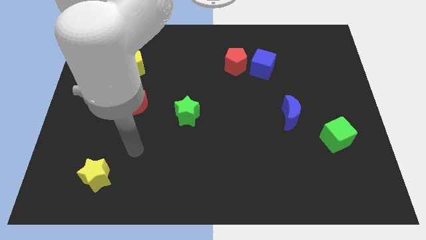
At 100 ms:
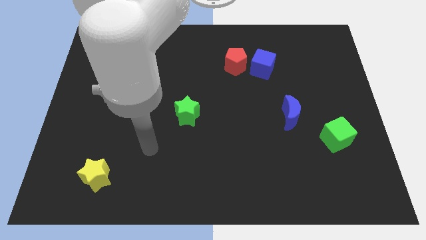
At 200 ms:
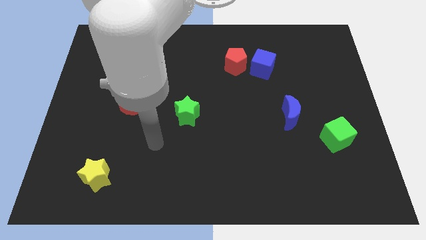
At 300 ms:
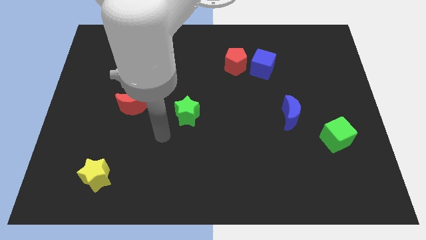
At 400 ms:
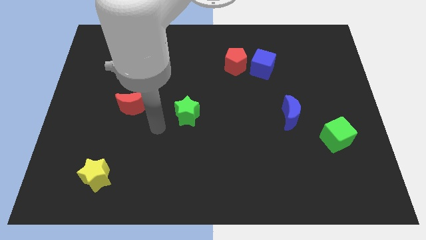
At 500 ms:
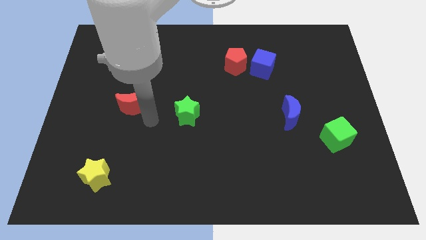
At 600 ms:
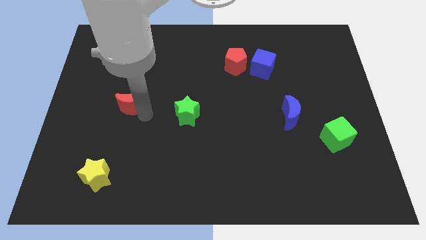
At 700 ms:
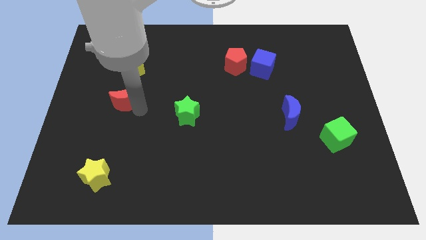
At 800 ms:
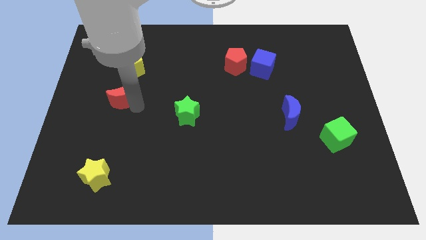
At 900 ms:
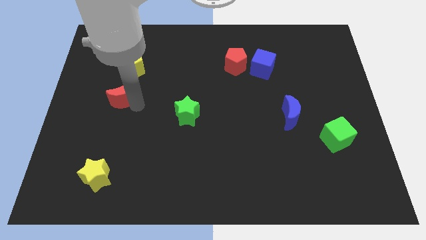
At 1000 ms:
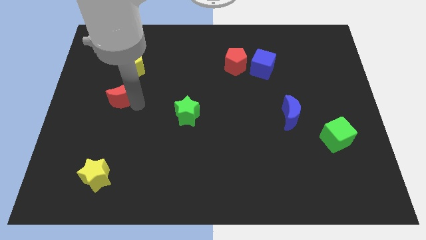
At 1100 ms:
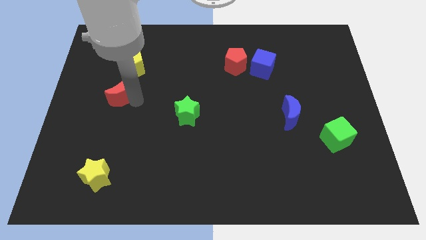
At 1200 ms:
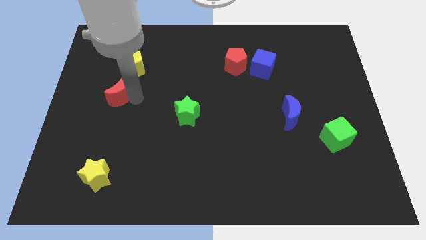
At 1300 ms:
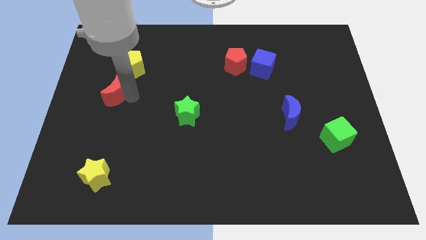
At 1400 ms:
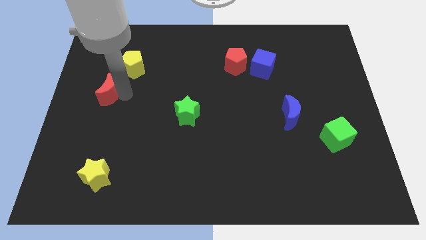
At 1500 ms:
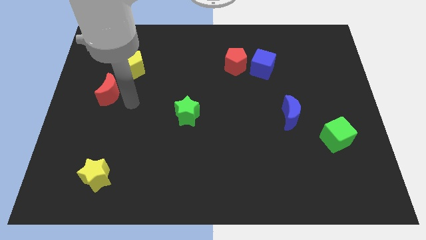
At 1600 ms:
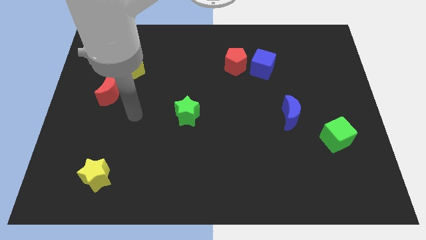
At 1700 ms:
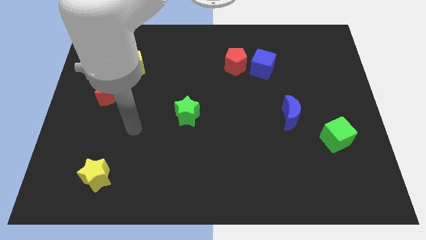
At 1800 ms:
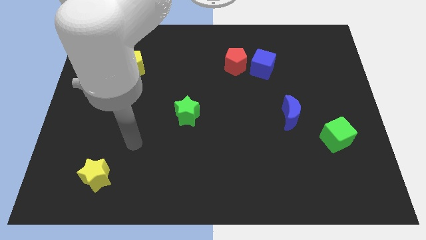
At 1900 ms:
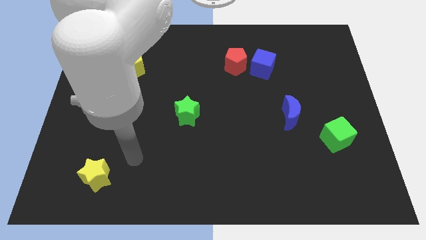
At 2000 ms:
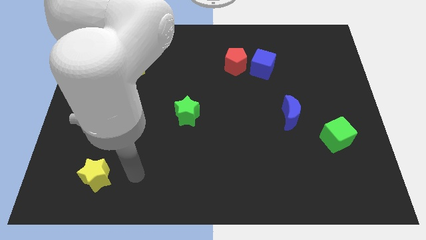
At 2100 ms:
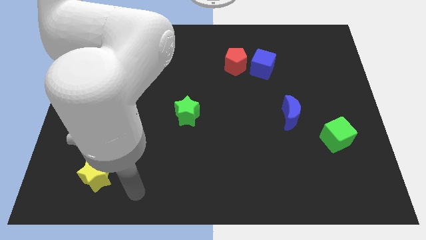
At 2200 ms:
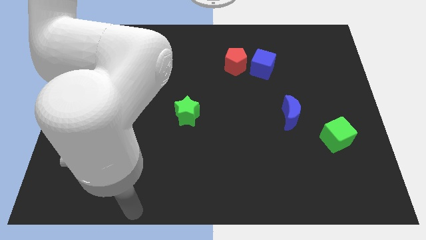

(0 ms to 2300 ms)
slide the red moon towards the left center

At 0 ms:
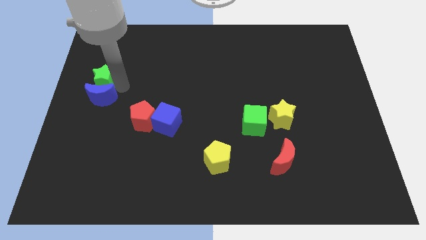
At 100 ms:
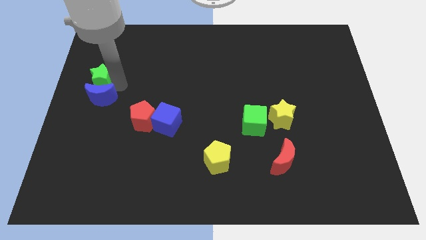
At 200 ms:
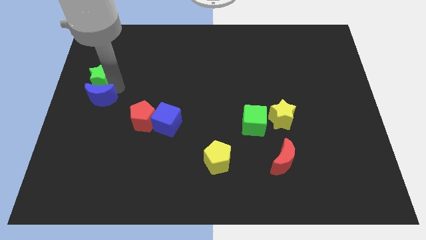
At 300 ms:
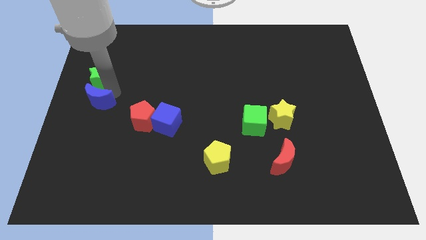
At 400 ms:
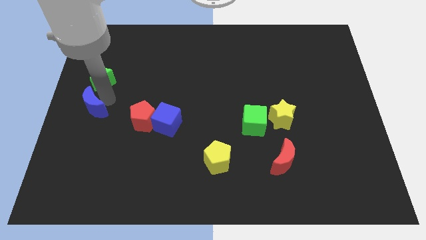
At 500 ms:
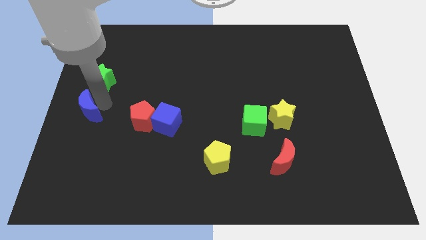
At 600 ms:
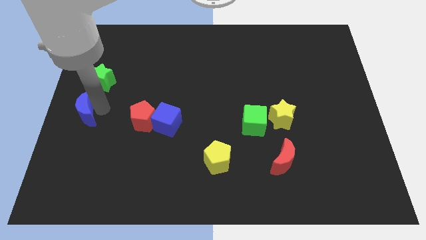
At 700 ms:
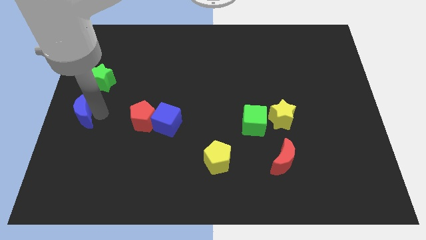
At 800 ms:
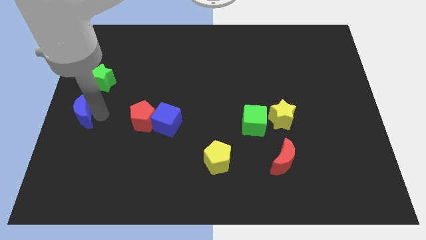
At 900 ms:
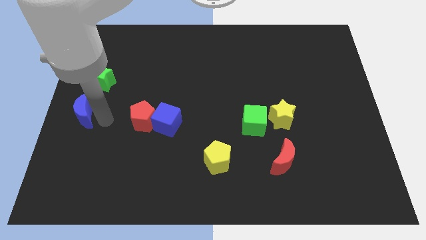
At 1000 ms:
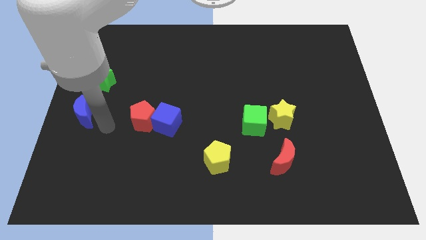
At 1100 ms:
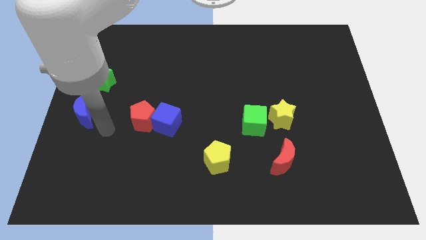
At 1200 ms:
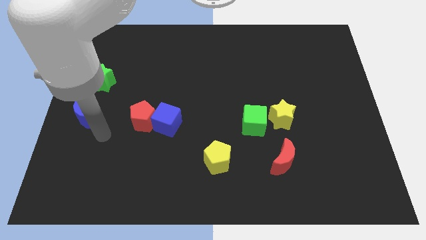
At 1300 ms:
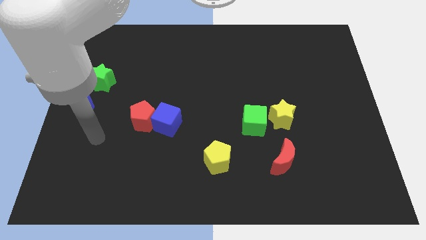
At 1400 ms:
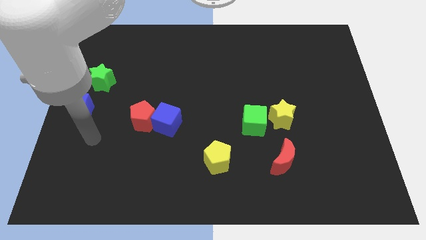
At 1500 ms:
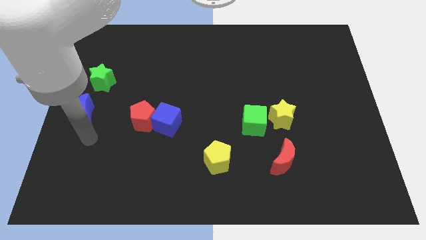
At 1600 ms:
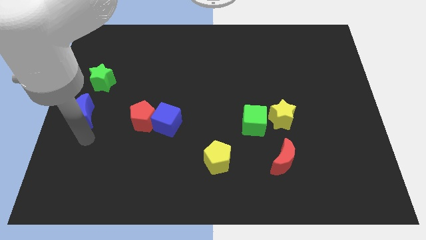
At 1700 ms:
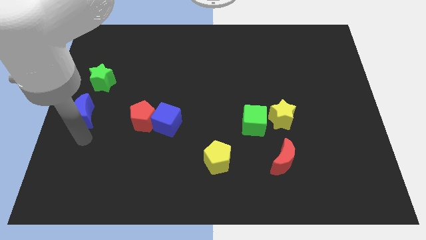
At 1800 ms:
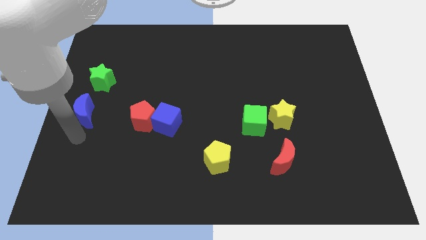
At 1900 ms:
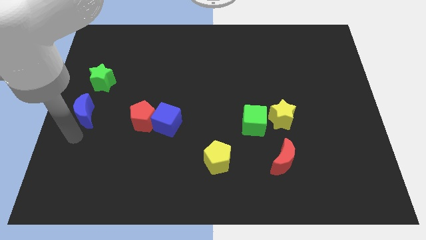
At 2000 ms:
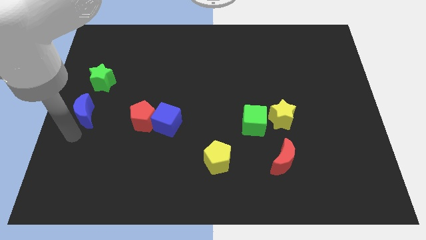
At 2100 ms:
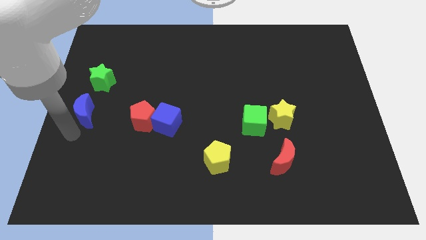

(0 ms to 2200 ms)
push the blue moon downwards slightly

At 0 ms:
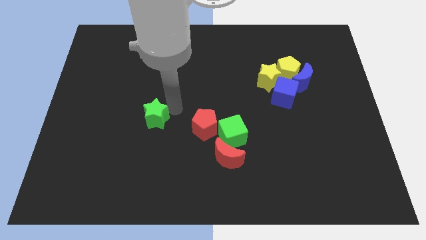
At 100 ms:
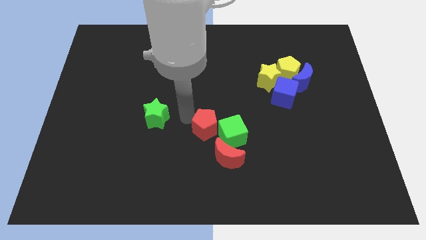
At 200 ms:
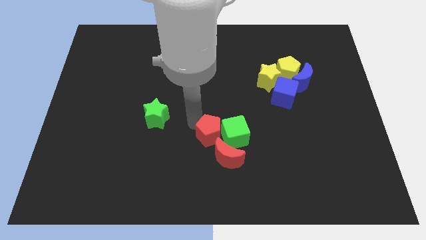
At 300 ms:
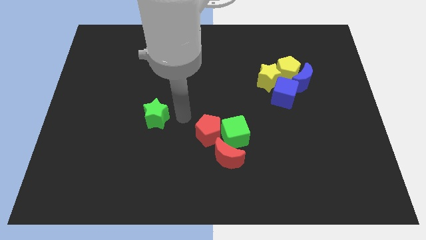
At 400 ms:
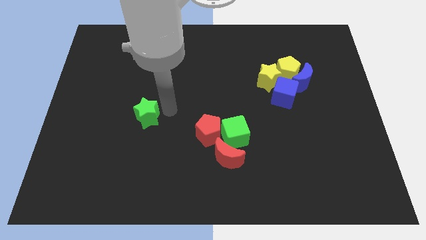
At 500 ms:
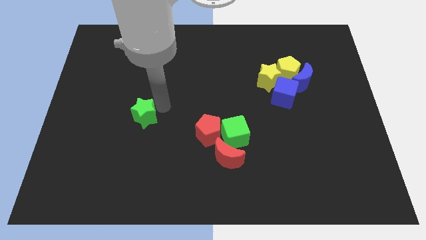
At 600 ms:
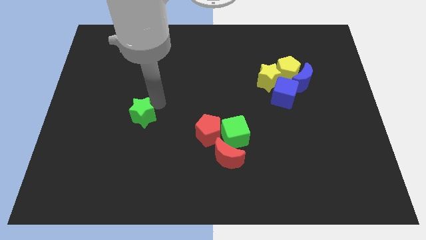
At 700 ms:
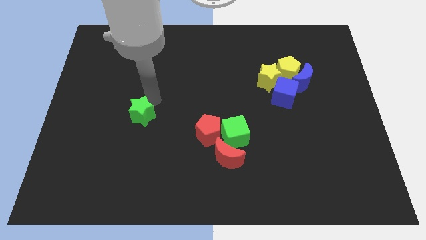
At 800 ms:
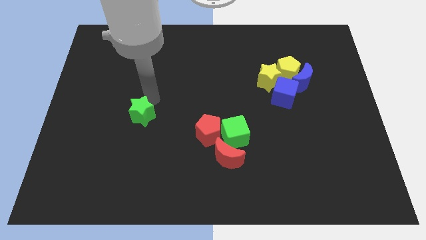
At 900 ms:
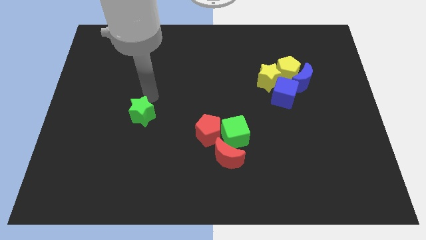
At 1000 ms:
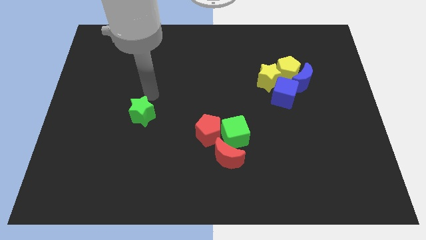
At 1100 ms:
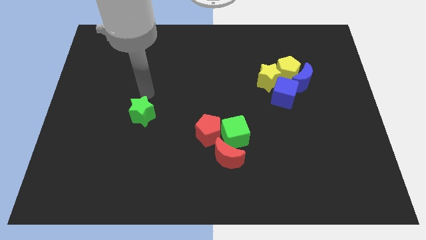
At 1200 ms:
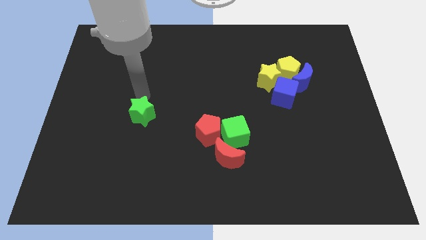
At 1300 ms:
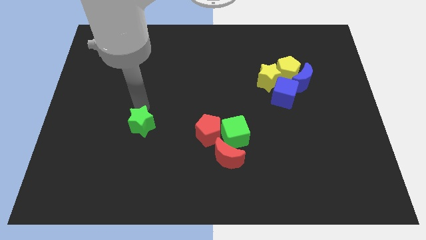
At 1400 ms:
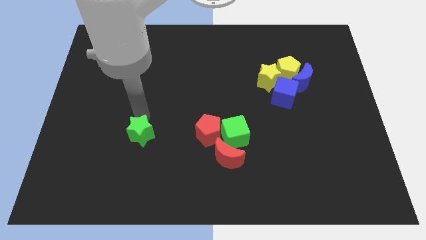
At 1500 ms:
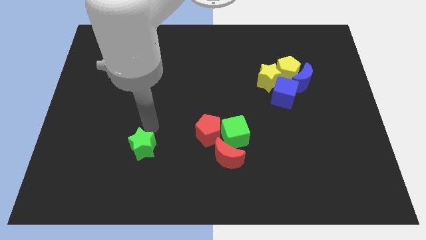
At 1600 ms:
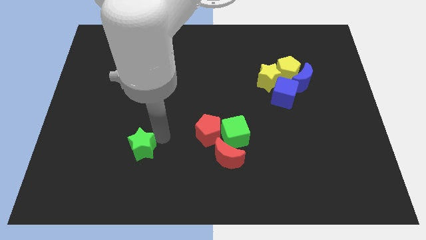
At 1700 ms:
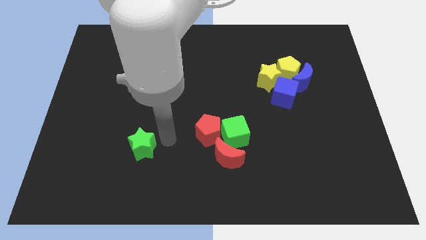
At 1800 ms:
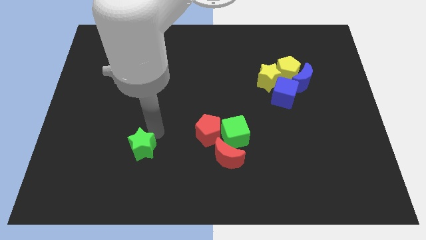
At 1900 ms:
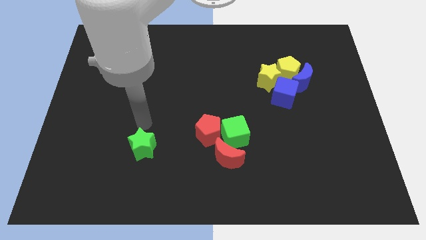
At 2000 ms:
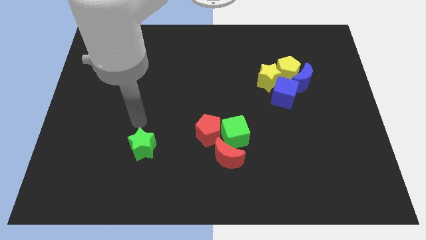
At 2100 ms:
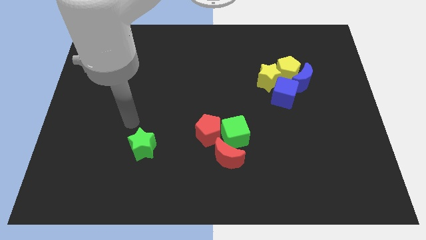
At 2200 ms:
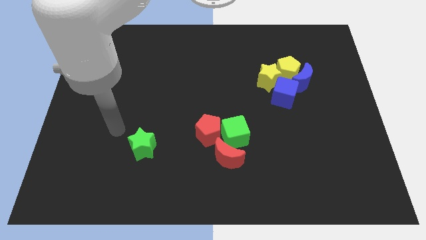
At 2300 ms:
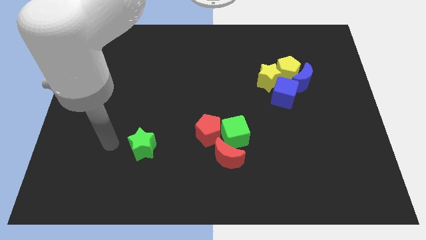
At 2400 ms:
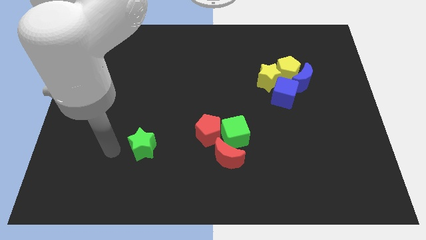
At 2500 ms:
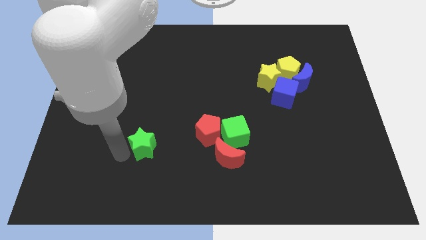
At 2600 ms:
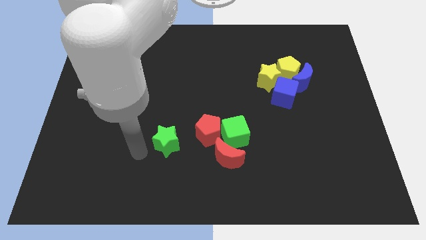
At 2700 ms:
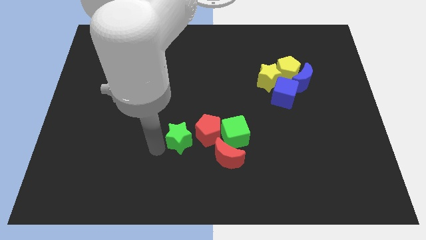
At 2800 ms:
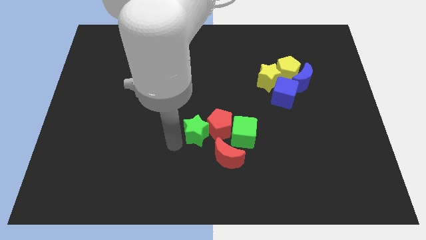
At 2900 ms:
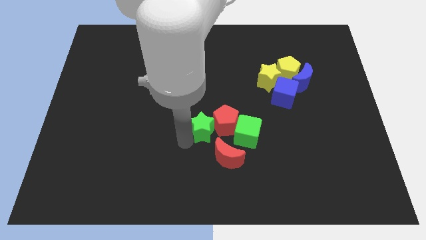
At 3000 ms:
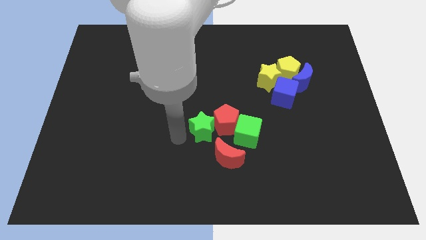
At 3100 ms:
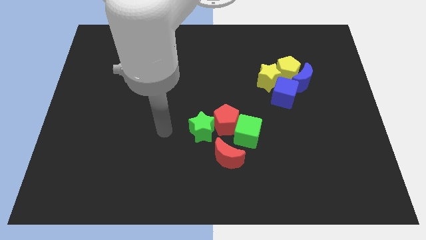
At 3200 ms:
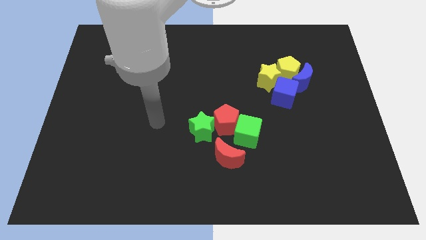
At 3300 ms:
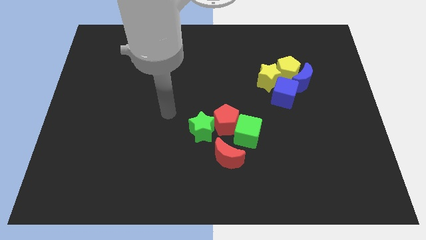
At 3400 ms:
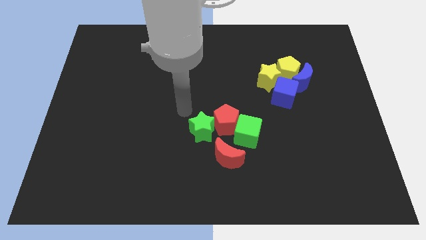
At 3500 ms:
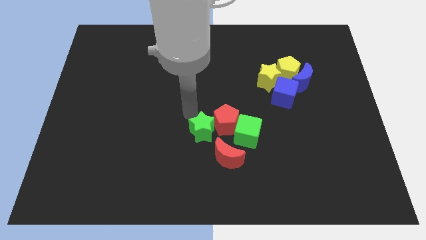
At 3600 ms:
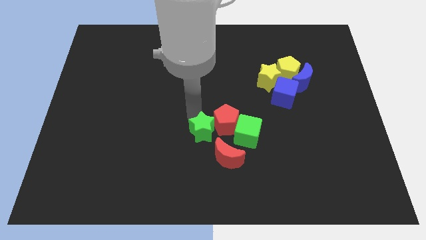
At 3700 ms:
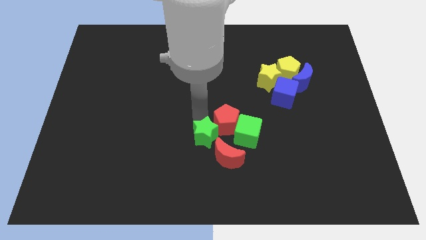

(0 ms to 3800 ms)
push the green star into the red pentagon

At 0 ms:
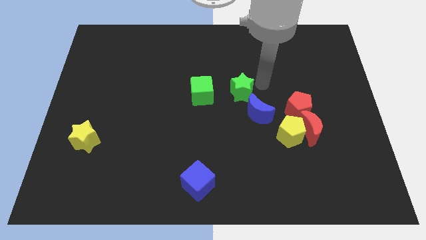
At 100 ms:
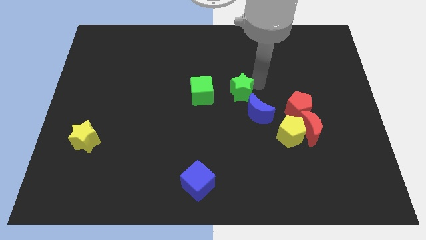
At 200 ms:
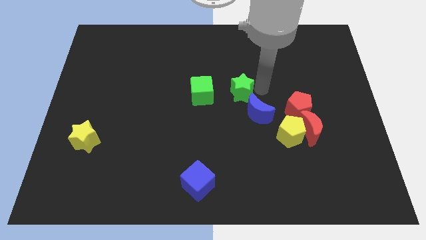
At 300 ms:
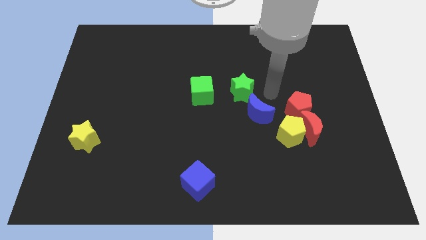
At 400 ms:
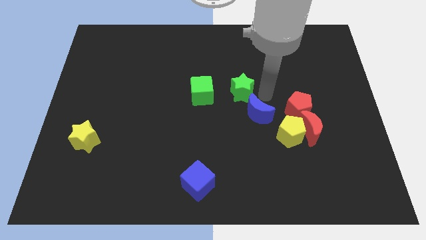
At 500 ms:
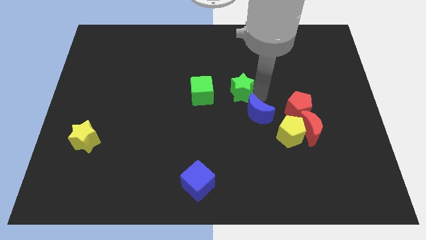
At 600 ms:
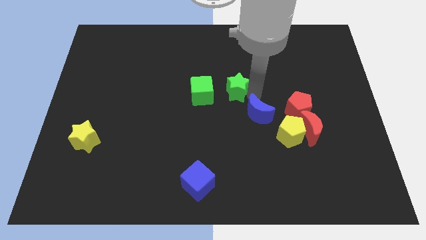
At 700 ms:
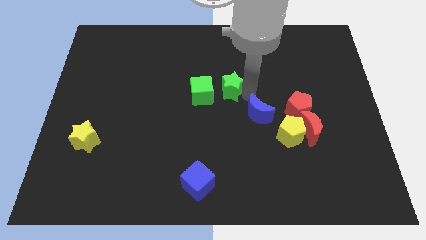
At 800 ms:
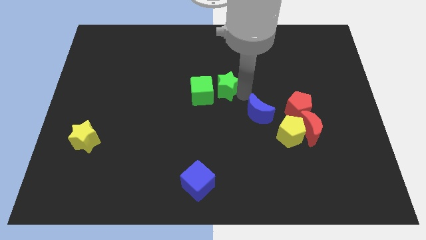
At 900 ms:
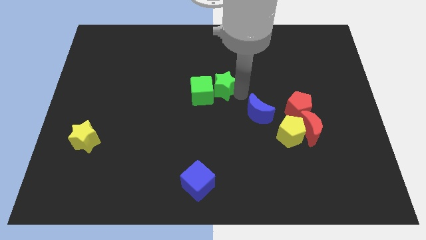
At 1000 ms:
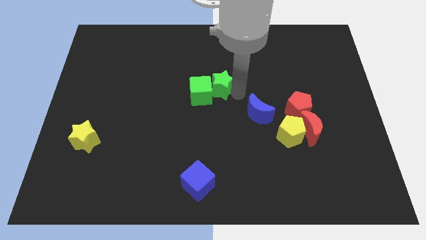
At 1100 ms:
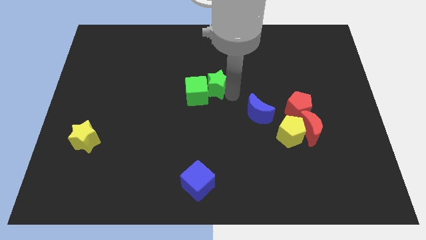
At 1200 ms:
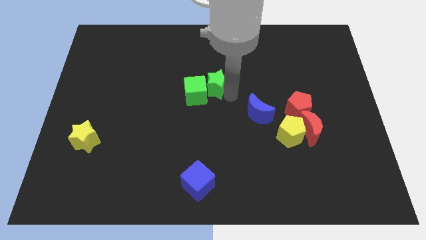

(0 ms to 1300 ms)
push the green star into the green cube
